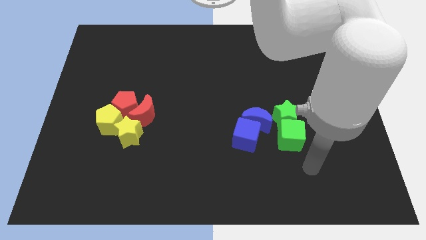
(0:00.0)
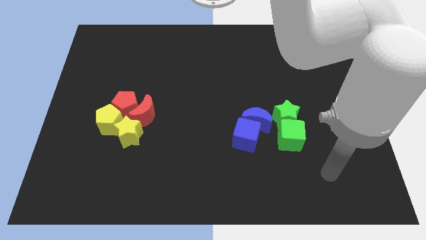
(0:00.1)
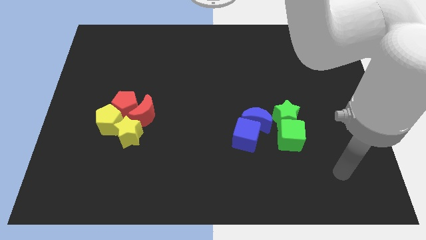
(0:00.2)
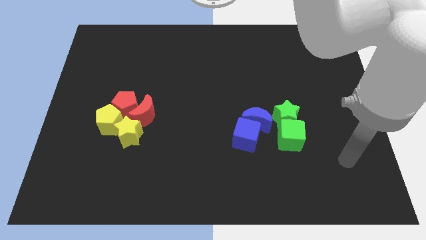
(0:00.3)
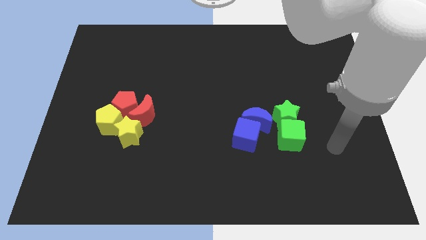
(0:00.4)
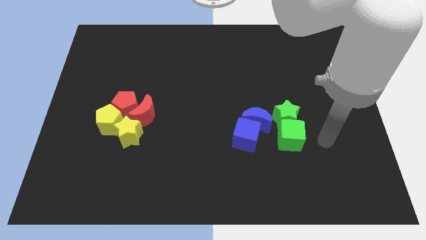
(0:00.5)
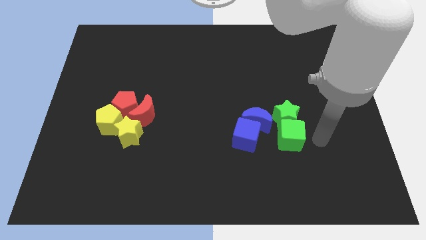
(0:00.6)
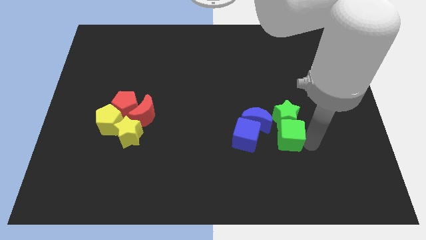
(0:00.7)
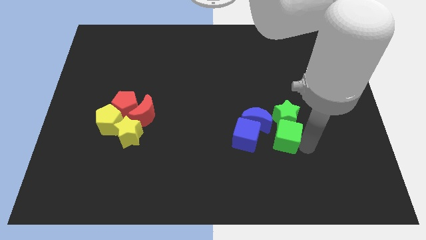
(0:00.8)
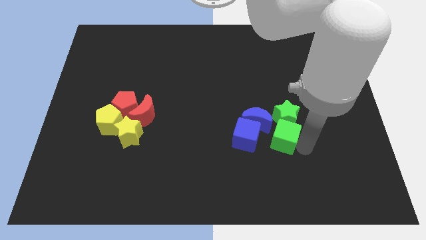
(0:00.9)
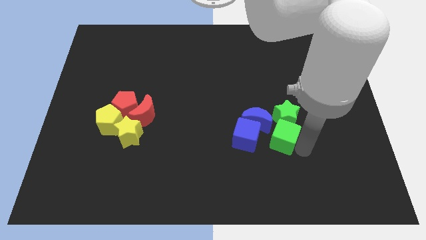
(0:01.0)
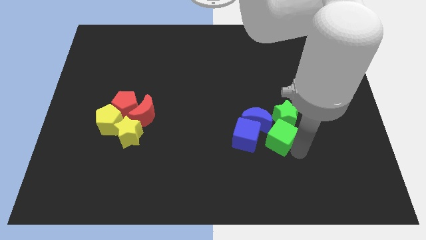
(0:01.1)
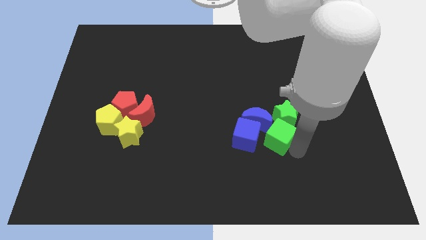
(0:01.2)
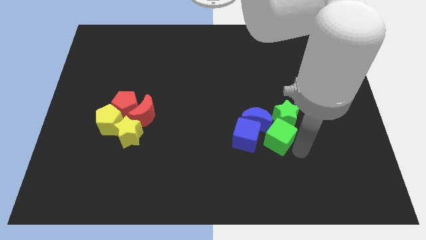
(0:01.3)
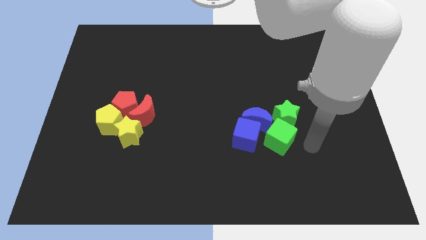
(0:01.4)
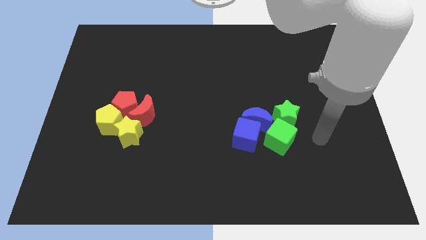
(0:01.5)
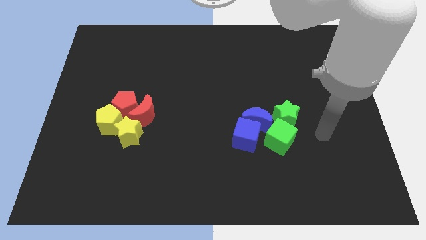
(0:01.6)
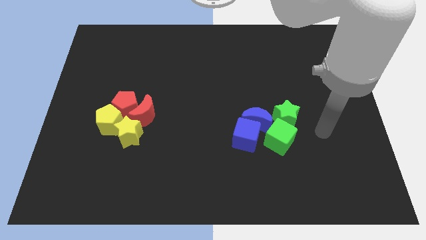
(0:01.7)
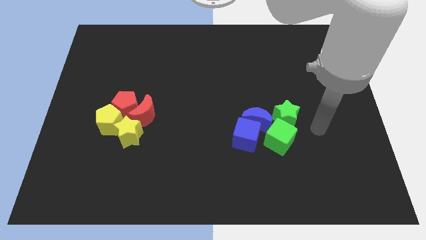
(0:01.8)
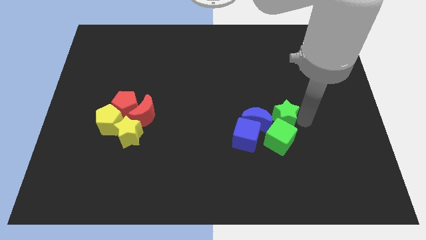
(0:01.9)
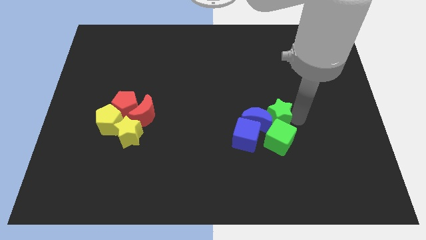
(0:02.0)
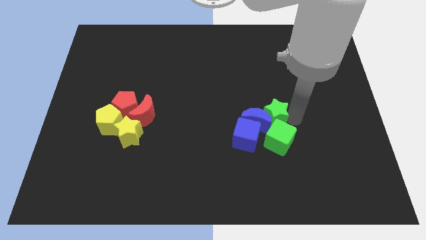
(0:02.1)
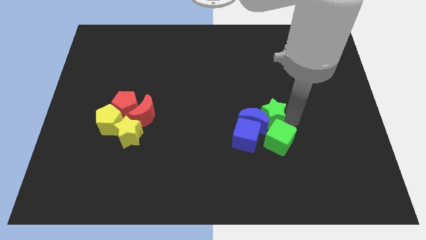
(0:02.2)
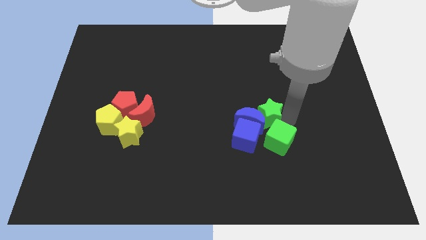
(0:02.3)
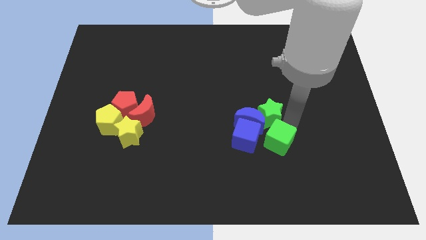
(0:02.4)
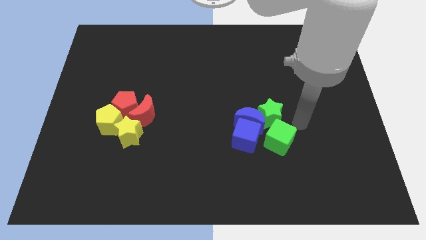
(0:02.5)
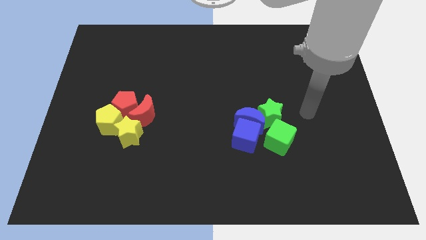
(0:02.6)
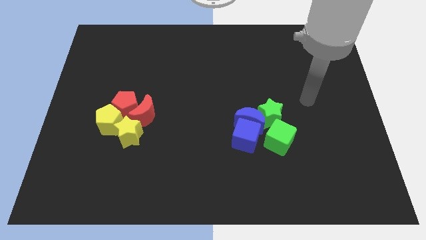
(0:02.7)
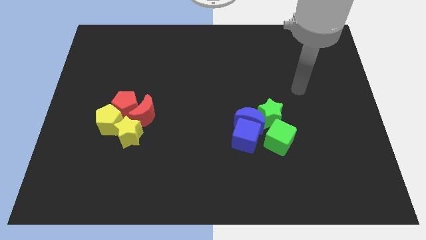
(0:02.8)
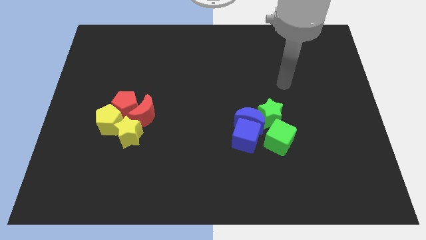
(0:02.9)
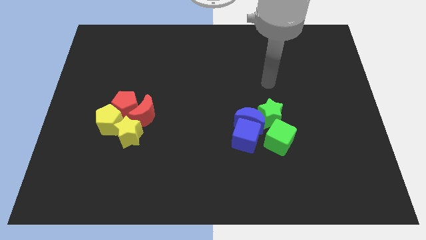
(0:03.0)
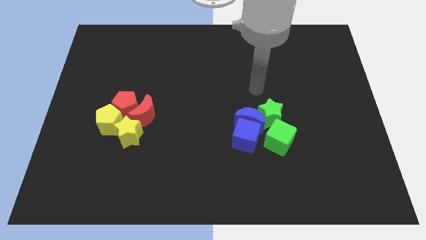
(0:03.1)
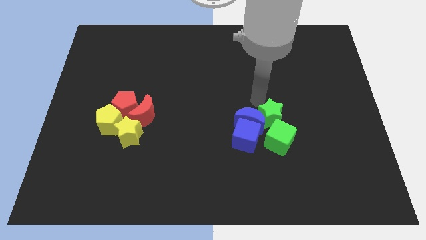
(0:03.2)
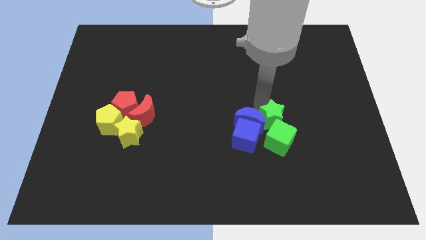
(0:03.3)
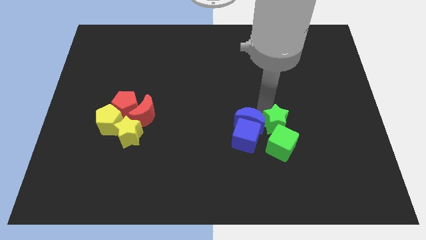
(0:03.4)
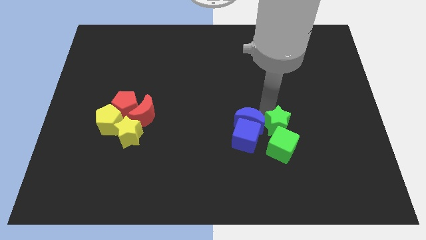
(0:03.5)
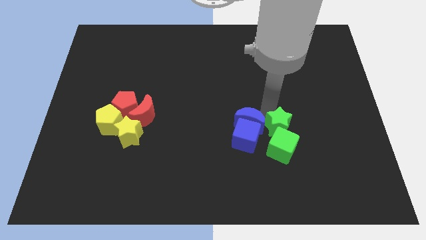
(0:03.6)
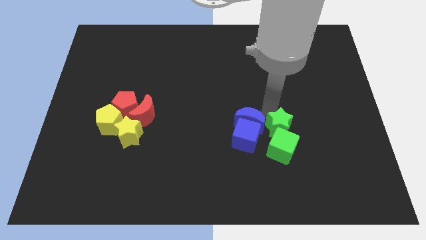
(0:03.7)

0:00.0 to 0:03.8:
move the green cube slightly to the left of blue cube

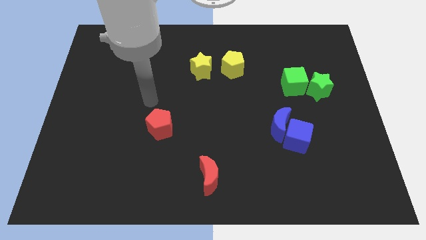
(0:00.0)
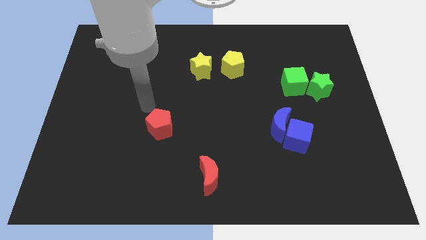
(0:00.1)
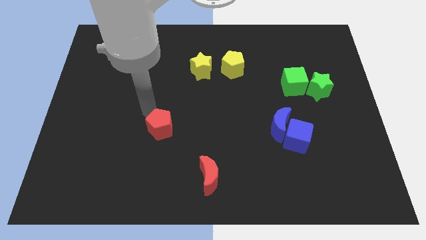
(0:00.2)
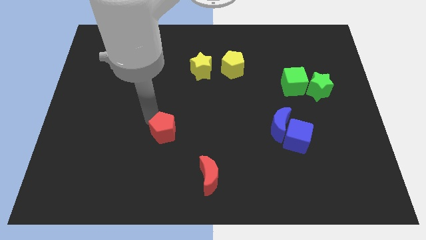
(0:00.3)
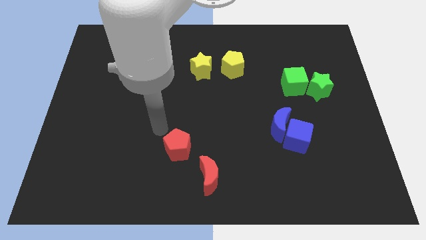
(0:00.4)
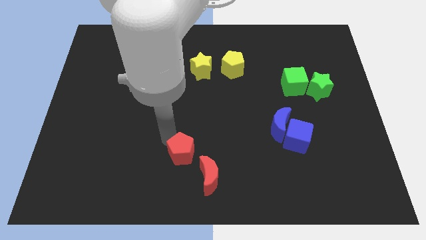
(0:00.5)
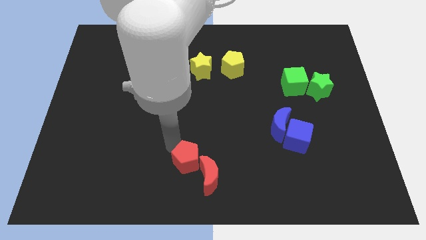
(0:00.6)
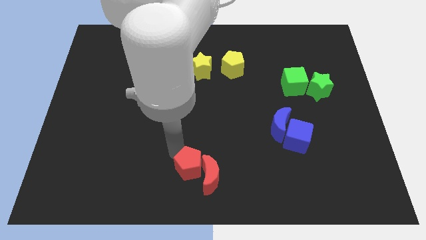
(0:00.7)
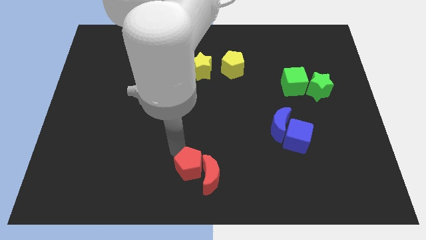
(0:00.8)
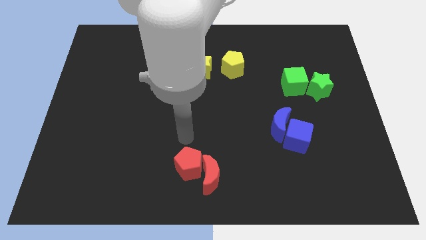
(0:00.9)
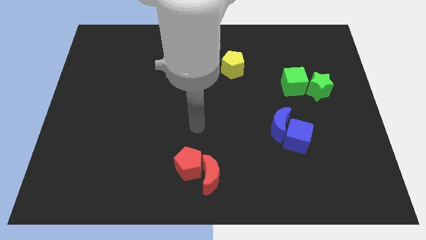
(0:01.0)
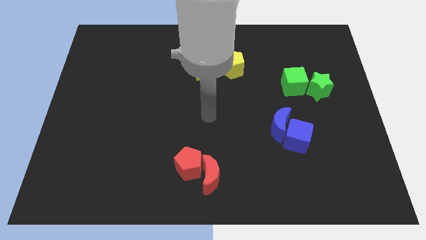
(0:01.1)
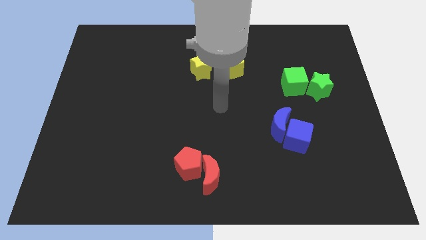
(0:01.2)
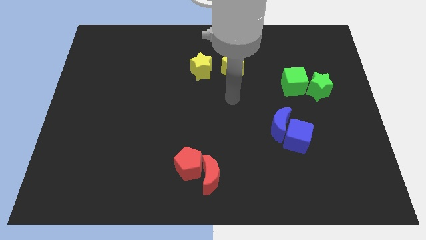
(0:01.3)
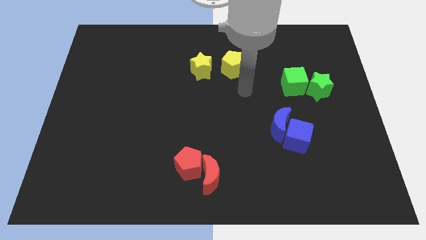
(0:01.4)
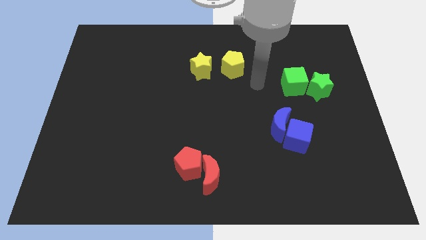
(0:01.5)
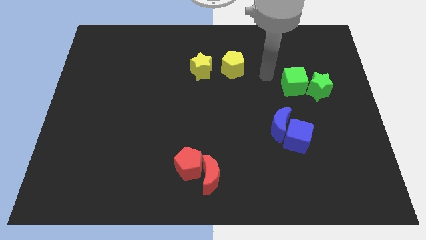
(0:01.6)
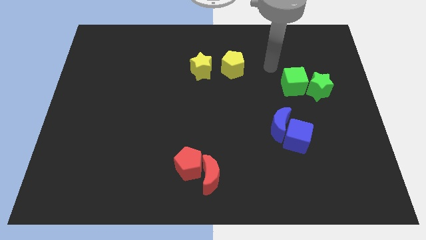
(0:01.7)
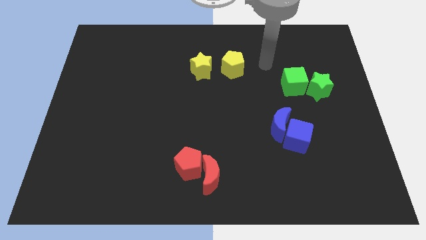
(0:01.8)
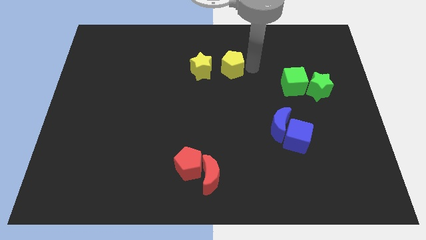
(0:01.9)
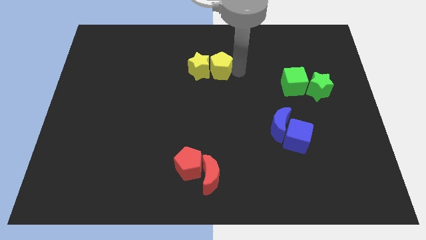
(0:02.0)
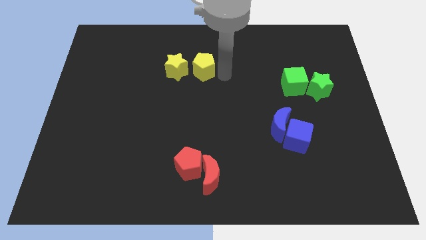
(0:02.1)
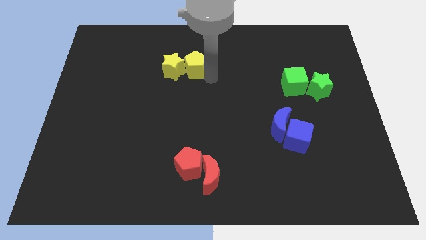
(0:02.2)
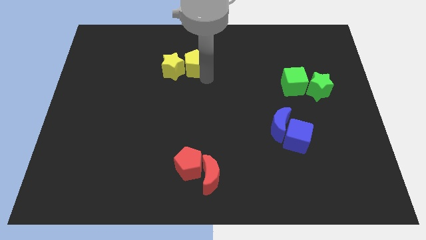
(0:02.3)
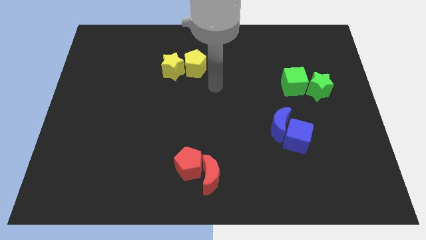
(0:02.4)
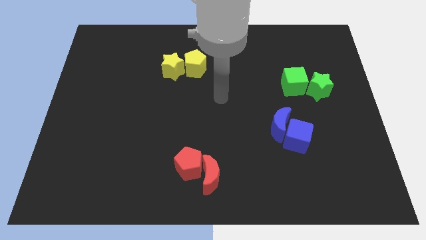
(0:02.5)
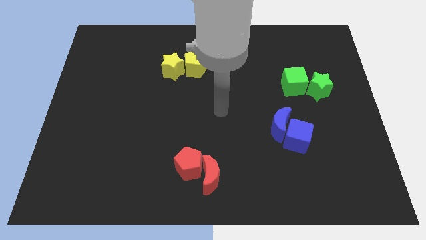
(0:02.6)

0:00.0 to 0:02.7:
group up the red blocks and yellow blocks separately

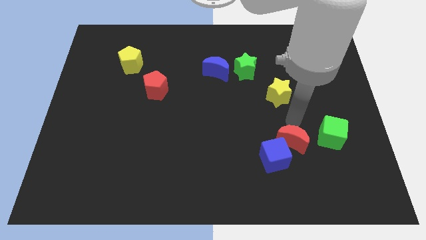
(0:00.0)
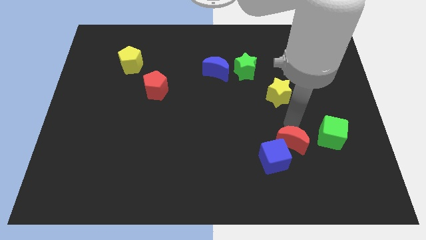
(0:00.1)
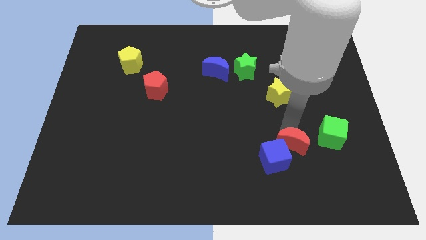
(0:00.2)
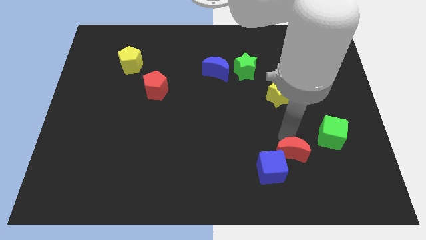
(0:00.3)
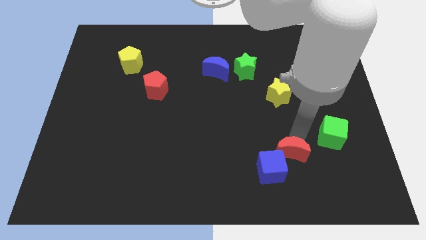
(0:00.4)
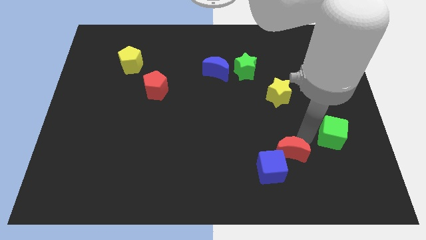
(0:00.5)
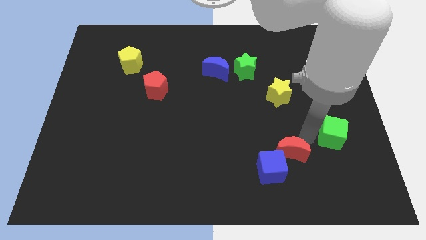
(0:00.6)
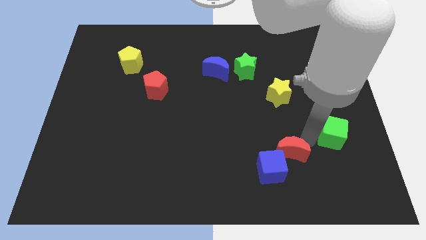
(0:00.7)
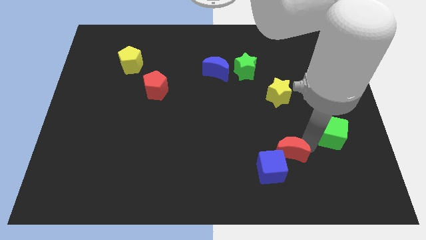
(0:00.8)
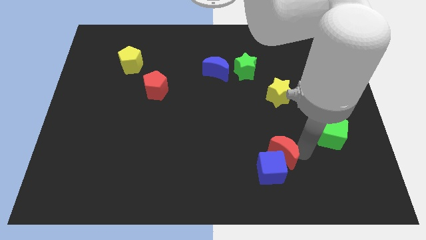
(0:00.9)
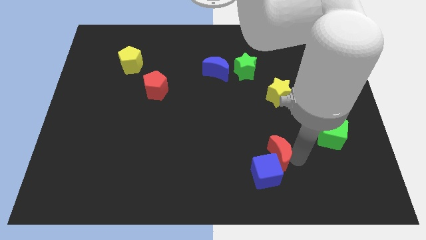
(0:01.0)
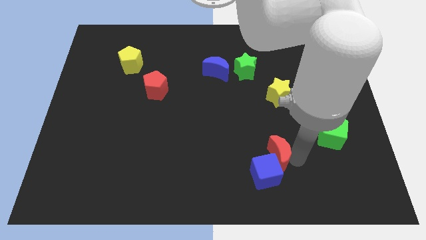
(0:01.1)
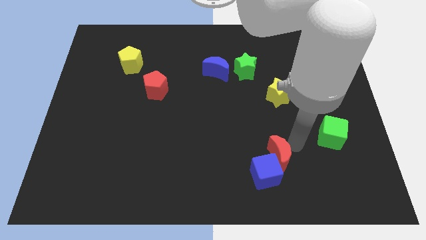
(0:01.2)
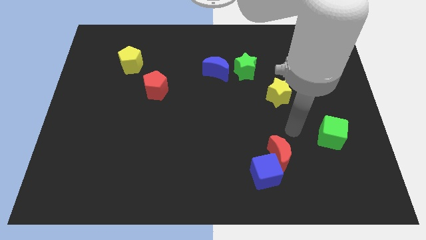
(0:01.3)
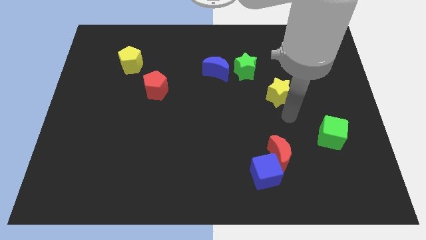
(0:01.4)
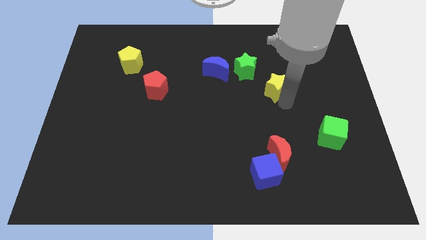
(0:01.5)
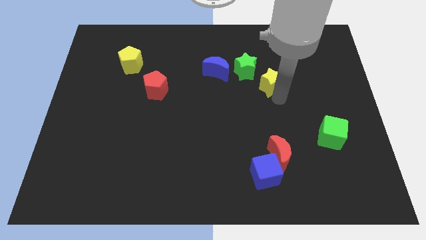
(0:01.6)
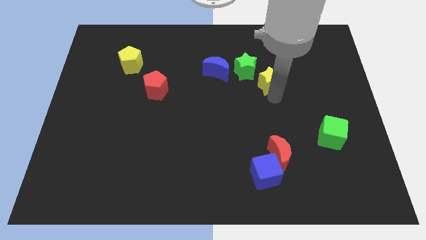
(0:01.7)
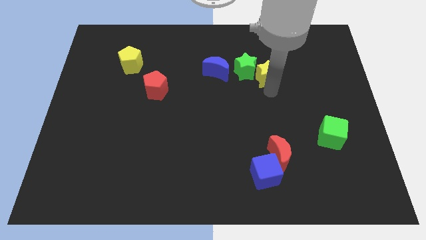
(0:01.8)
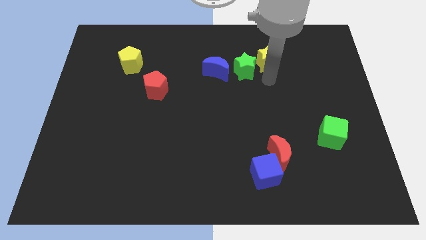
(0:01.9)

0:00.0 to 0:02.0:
move yellow star beside green star

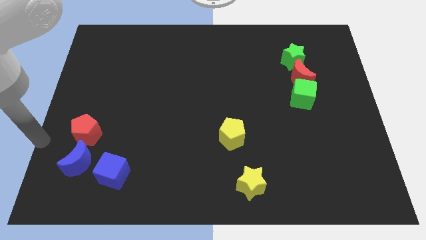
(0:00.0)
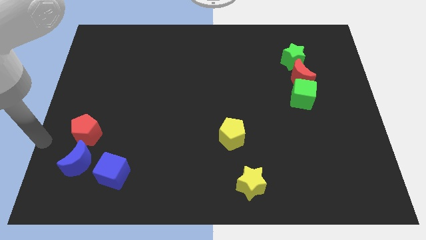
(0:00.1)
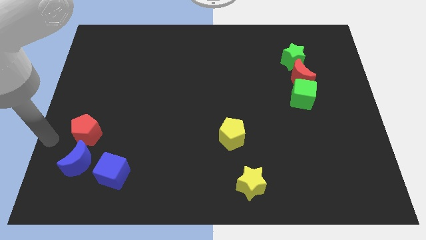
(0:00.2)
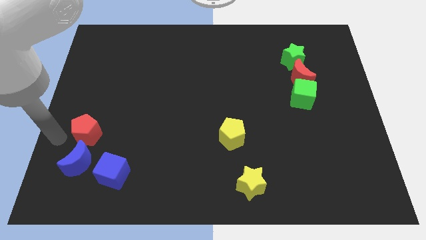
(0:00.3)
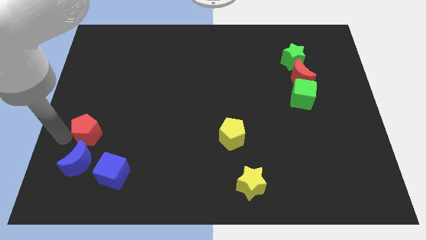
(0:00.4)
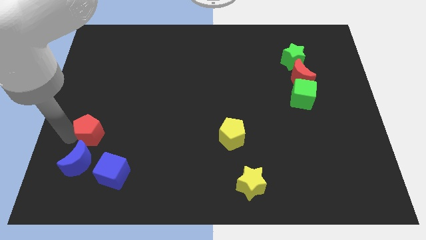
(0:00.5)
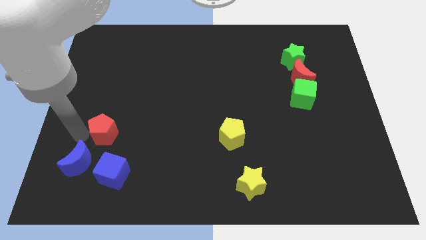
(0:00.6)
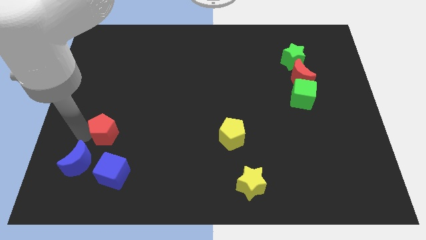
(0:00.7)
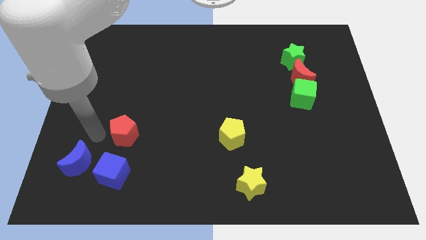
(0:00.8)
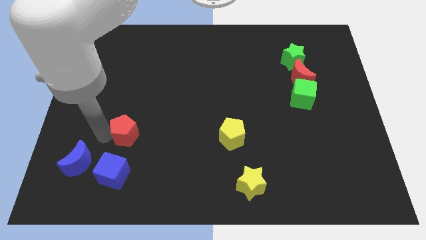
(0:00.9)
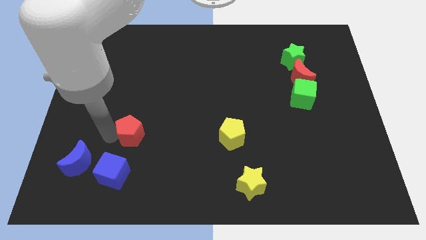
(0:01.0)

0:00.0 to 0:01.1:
move the red pentagon to the right
